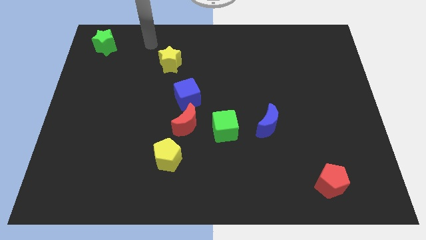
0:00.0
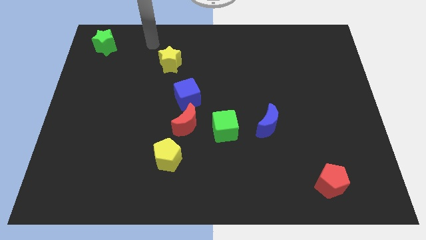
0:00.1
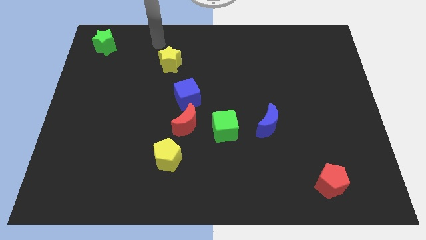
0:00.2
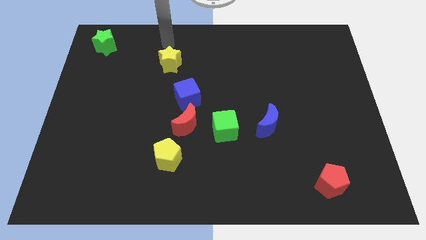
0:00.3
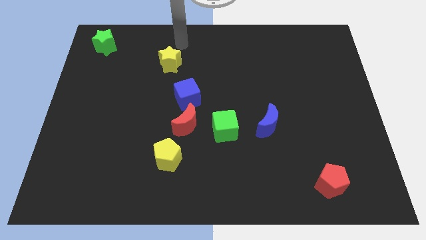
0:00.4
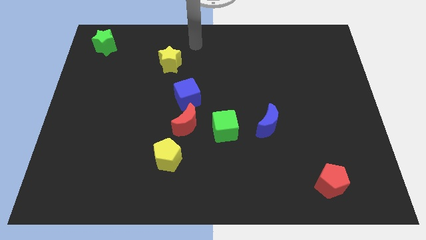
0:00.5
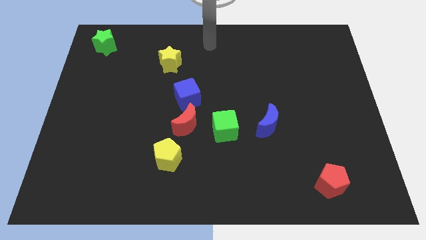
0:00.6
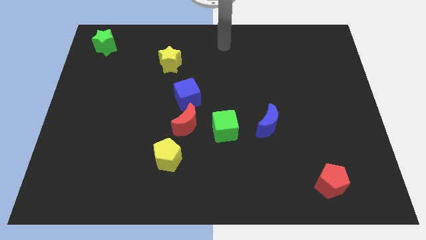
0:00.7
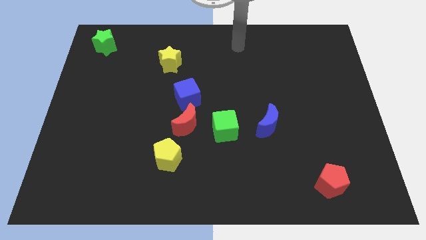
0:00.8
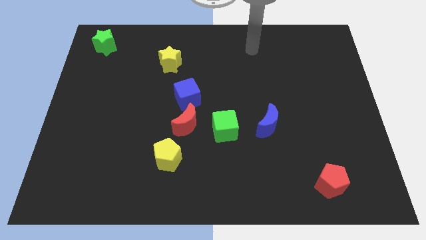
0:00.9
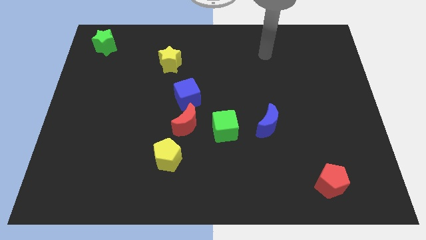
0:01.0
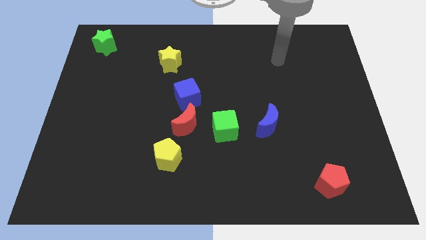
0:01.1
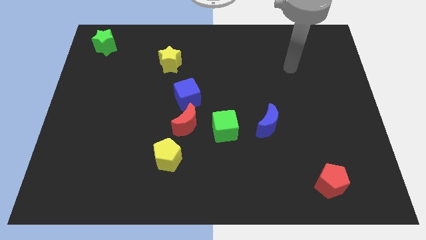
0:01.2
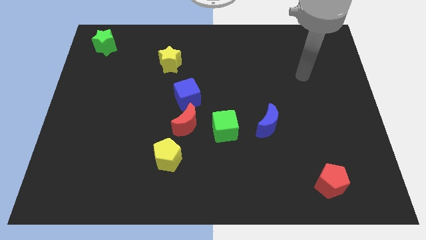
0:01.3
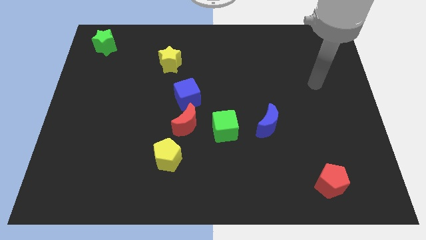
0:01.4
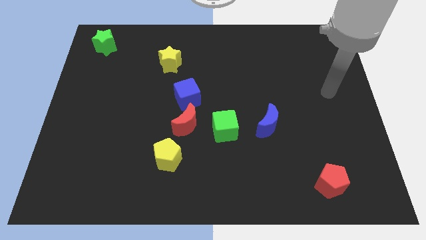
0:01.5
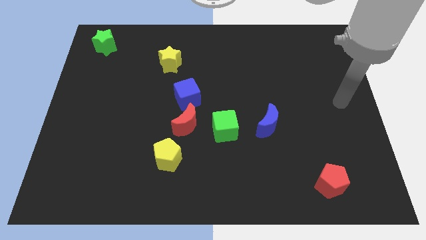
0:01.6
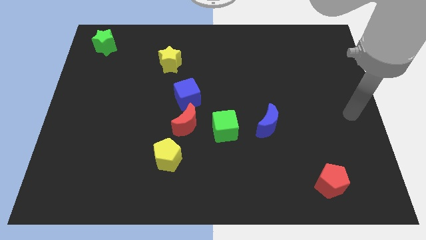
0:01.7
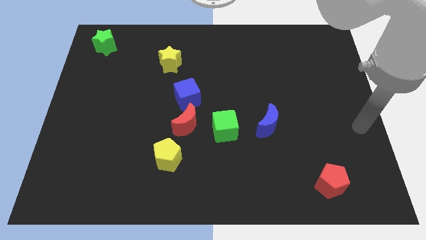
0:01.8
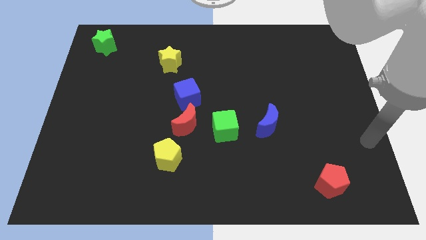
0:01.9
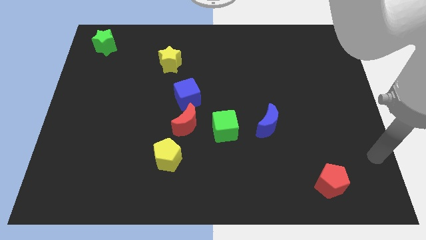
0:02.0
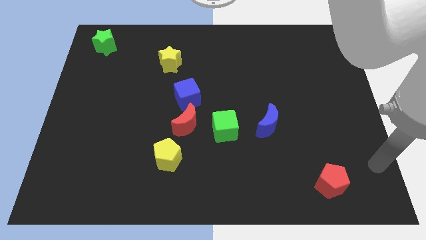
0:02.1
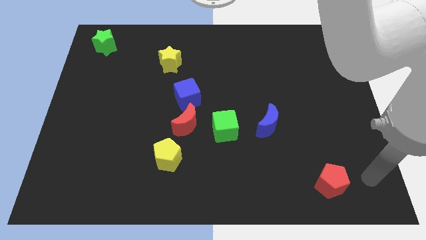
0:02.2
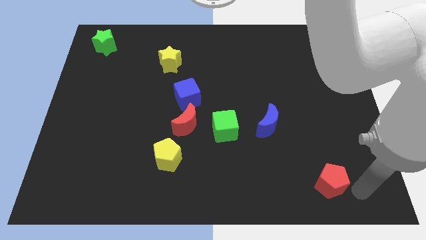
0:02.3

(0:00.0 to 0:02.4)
move your arm to the right of the red pentagon

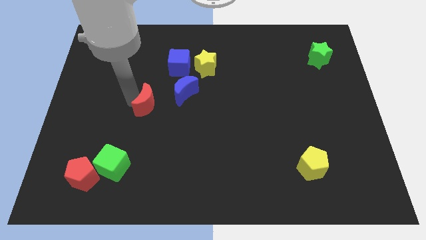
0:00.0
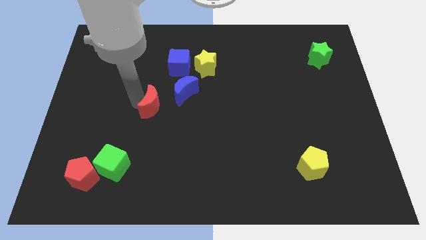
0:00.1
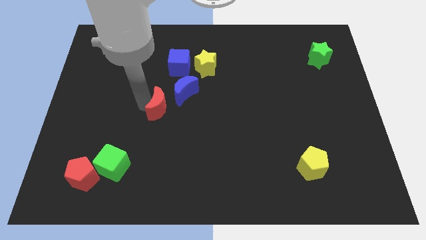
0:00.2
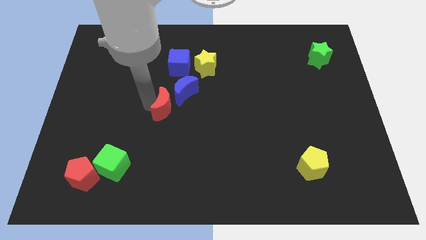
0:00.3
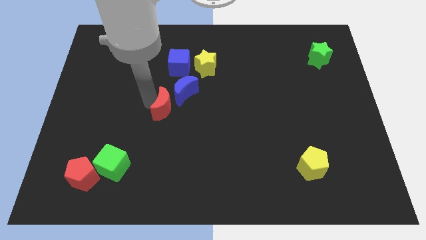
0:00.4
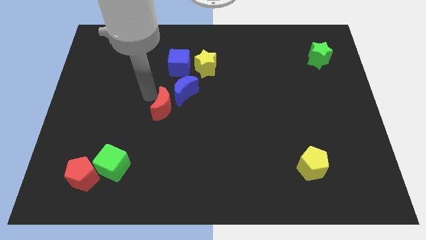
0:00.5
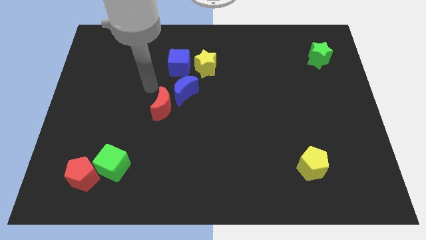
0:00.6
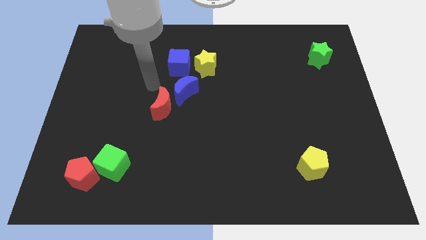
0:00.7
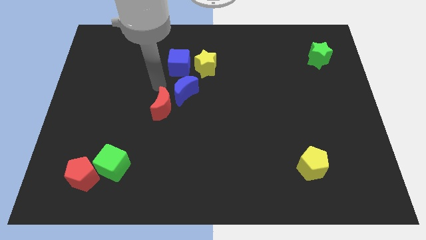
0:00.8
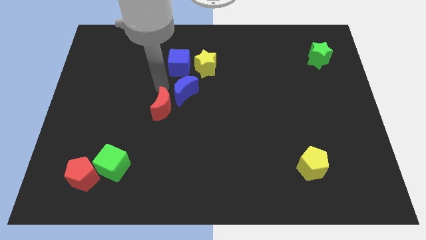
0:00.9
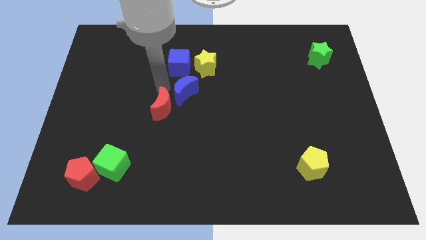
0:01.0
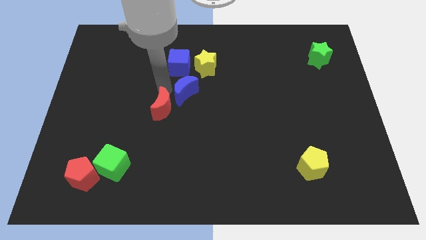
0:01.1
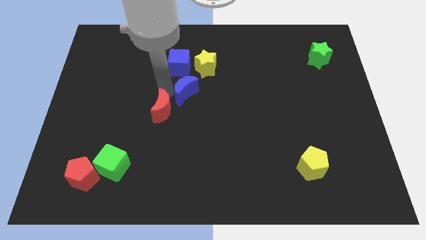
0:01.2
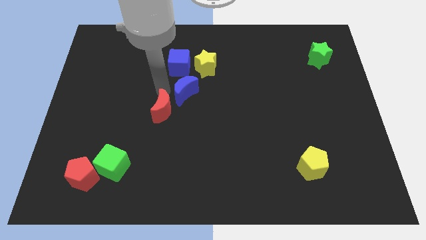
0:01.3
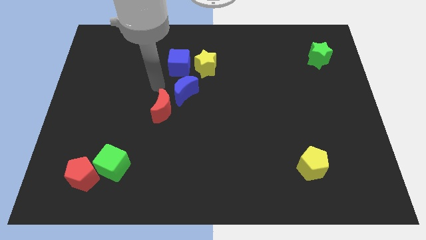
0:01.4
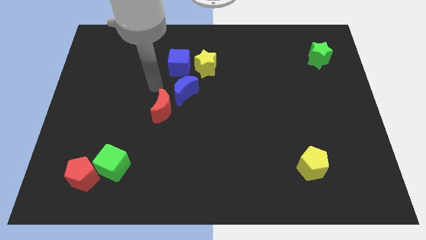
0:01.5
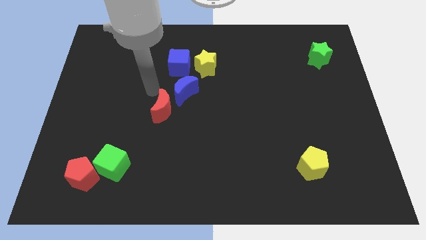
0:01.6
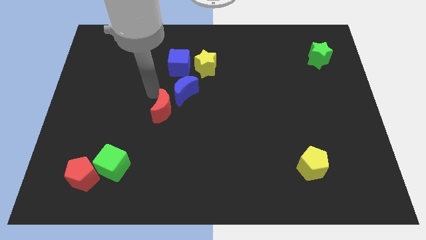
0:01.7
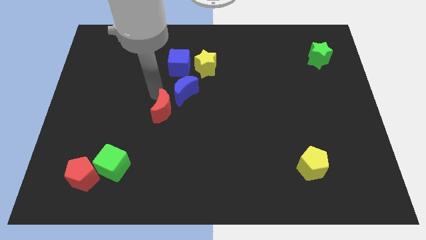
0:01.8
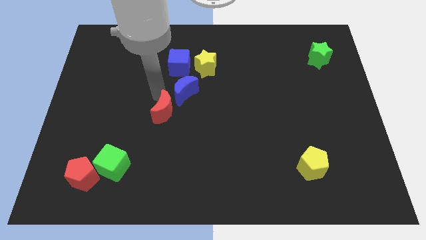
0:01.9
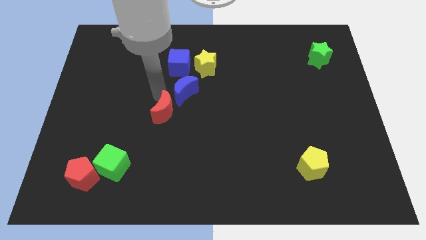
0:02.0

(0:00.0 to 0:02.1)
push the red crescent slightly towards the center of the board

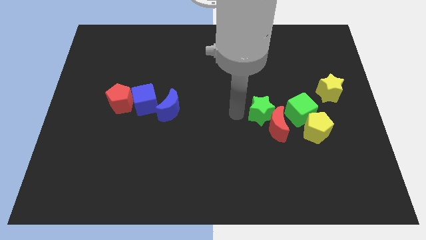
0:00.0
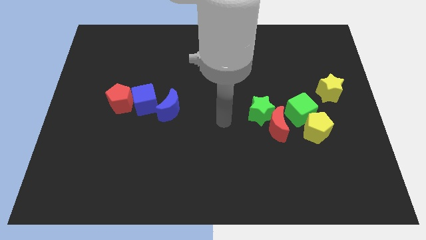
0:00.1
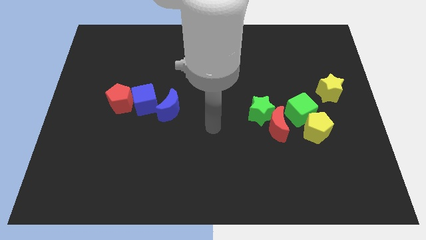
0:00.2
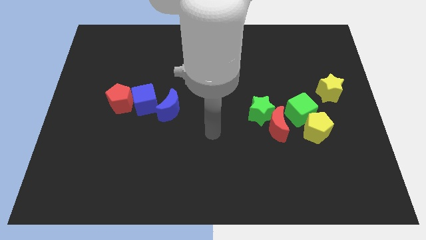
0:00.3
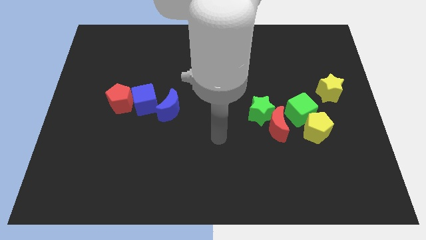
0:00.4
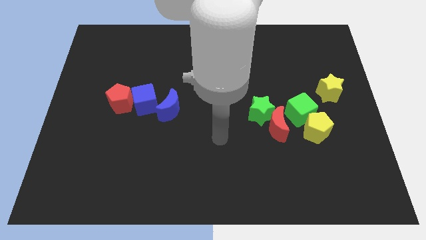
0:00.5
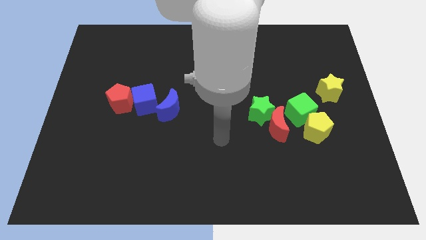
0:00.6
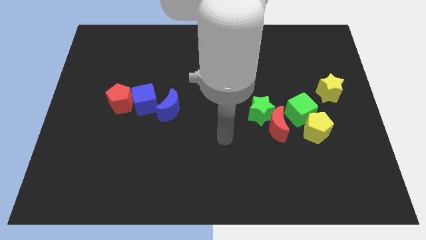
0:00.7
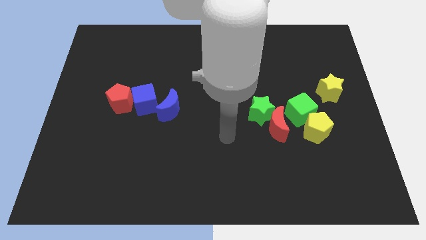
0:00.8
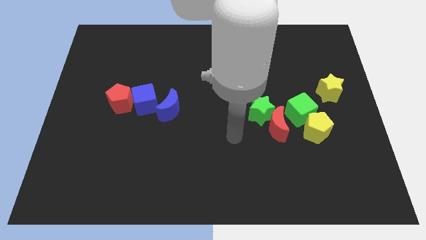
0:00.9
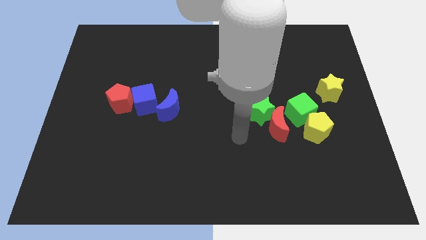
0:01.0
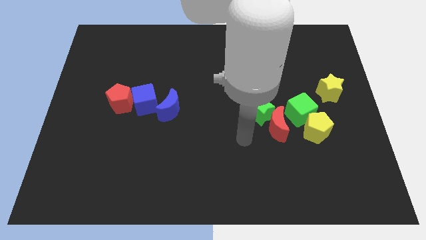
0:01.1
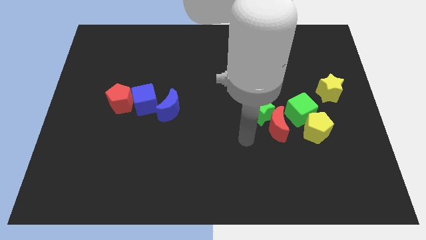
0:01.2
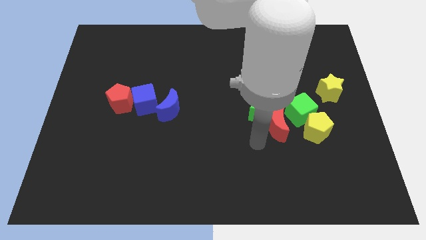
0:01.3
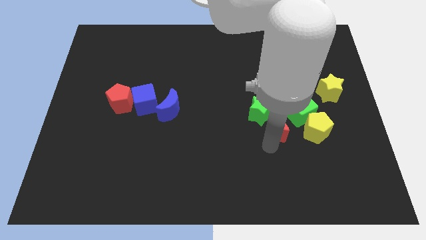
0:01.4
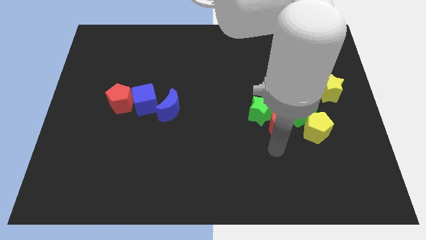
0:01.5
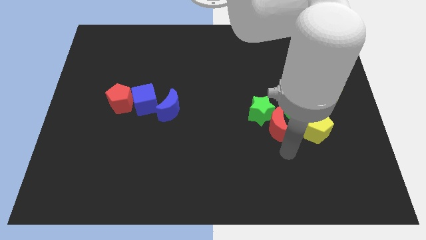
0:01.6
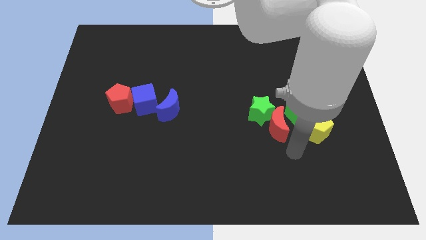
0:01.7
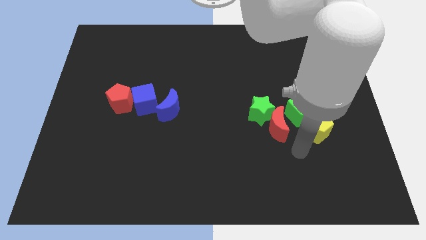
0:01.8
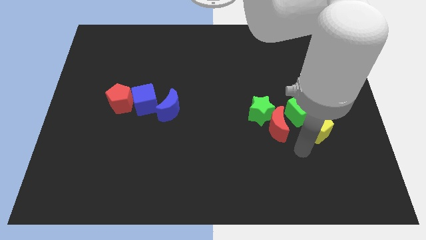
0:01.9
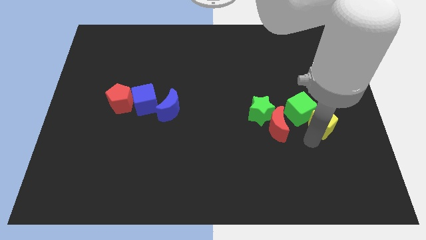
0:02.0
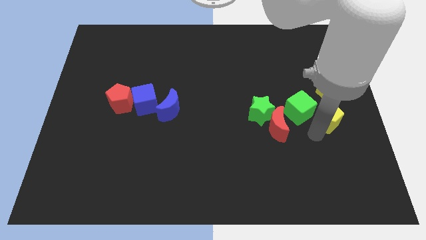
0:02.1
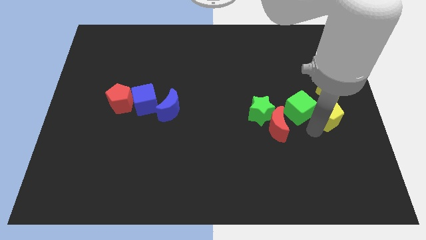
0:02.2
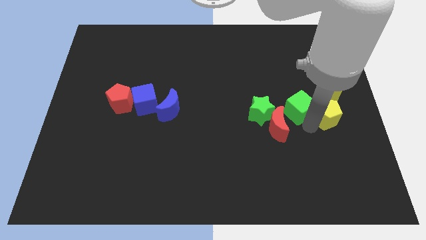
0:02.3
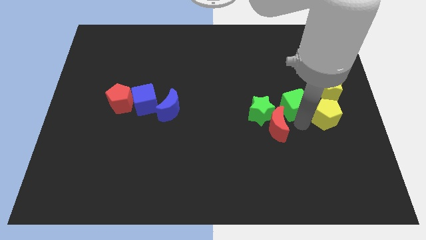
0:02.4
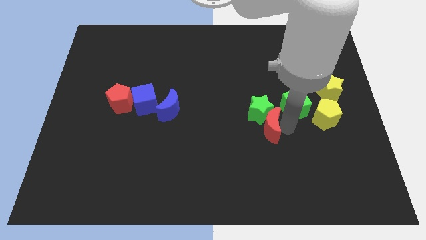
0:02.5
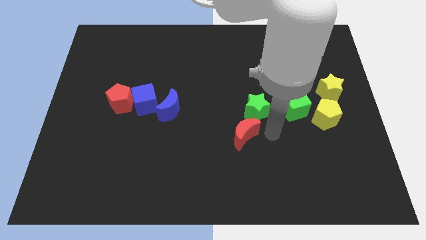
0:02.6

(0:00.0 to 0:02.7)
push the yellow pentagon to the bottom of the yellow star

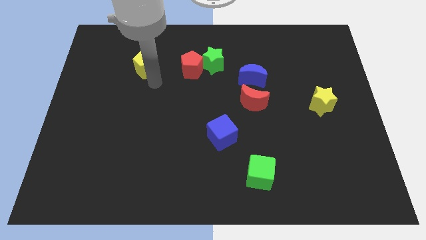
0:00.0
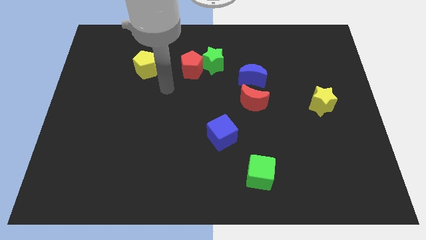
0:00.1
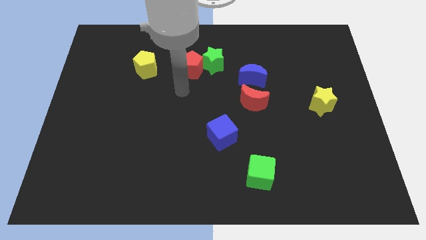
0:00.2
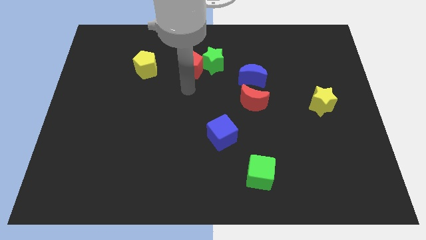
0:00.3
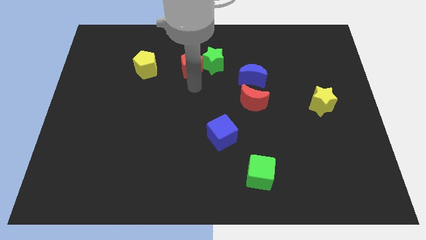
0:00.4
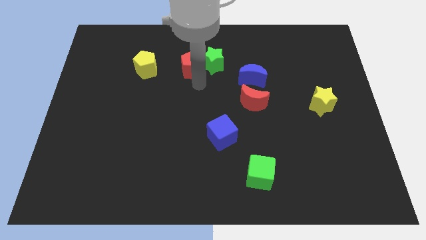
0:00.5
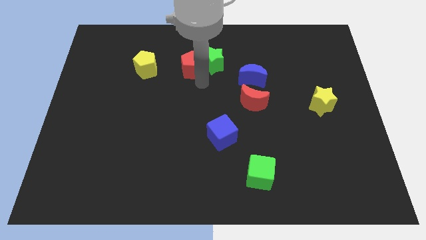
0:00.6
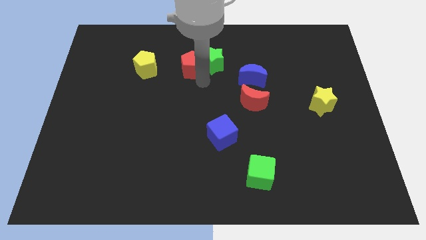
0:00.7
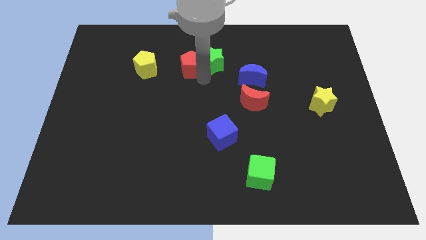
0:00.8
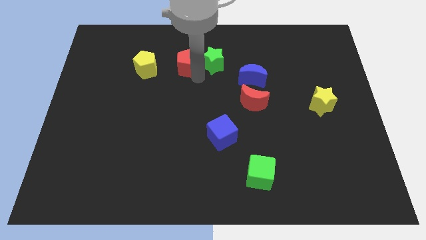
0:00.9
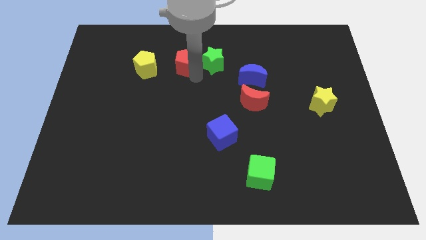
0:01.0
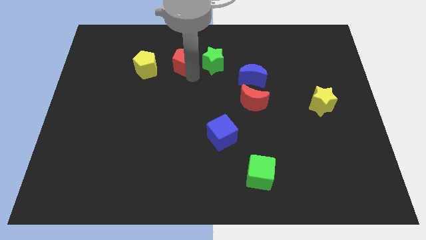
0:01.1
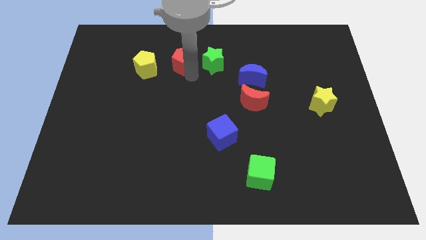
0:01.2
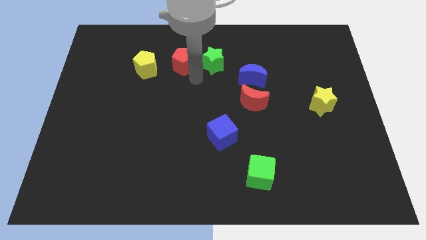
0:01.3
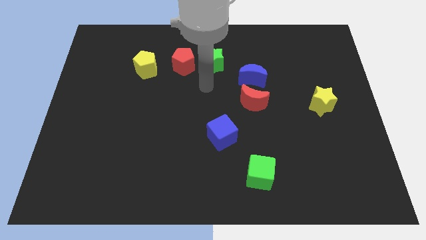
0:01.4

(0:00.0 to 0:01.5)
slightly push the red pentagon between green star and yellow pentagon

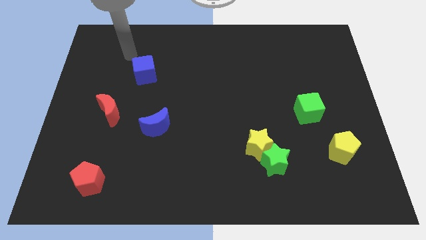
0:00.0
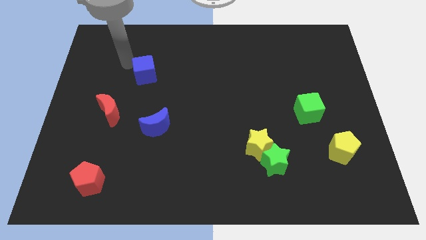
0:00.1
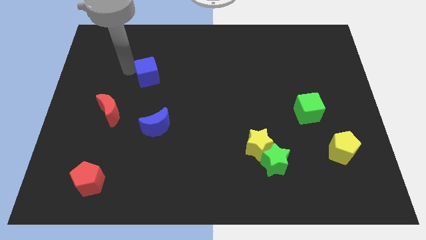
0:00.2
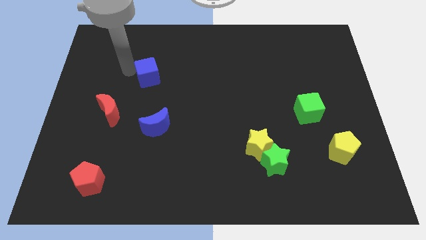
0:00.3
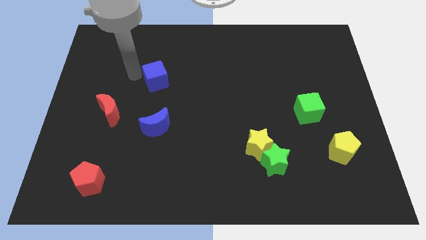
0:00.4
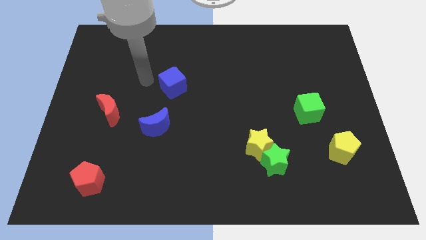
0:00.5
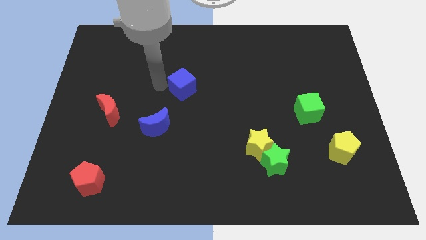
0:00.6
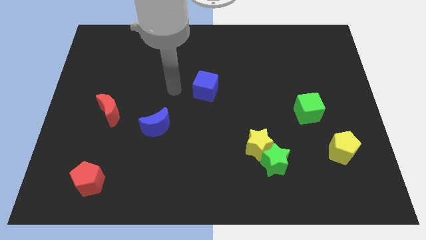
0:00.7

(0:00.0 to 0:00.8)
push blue cube slightly towards right downwards
